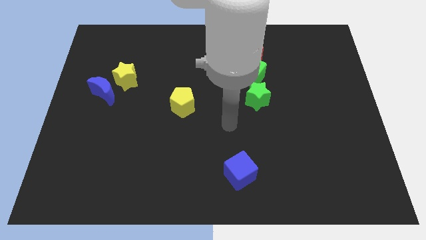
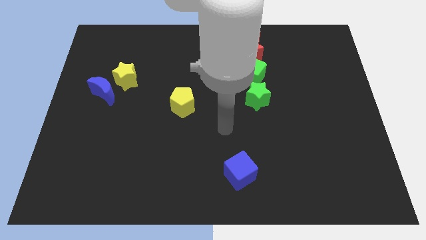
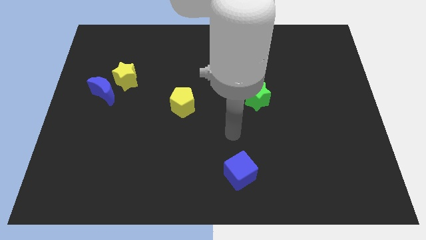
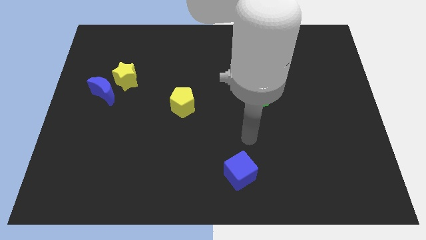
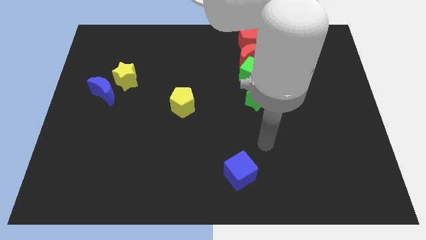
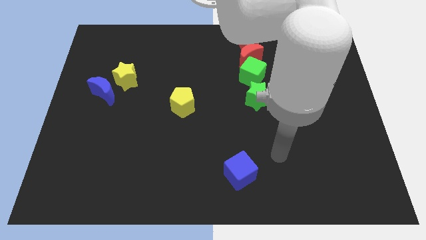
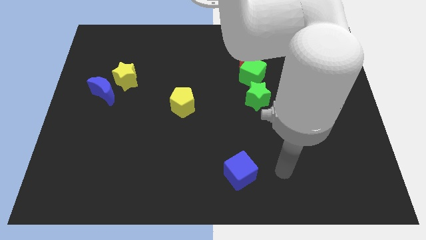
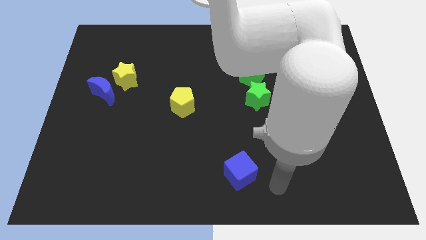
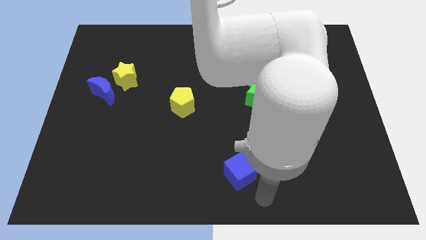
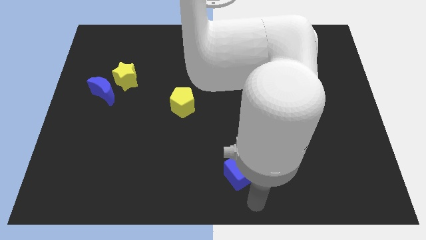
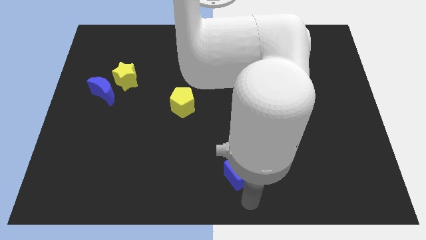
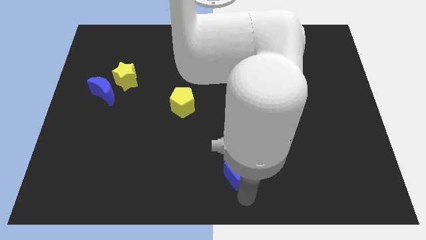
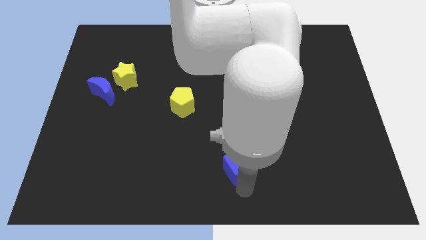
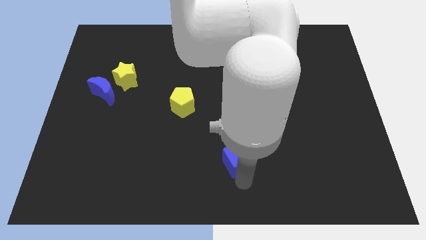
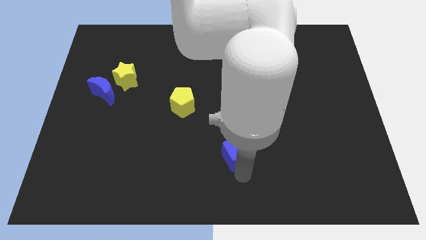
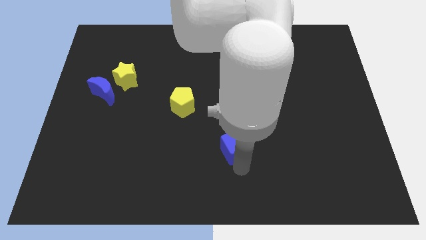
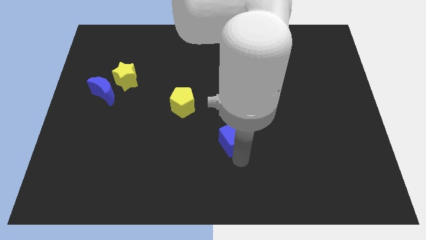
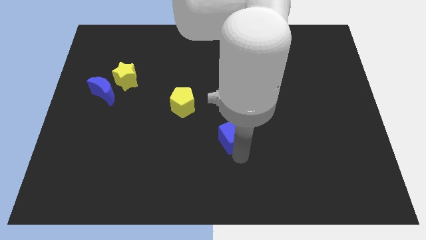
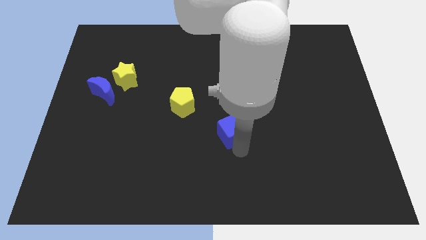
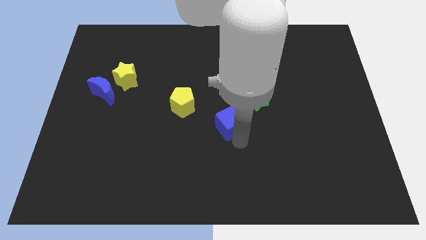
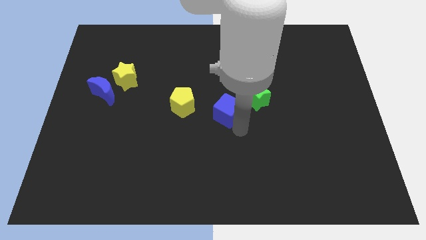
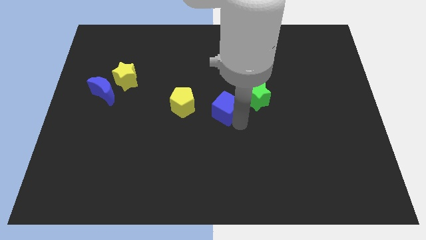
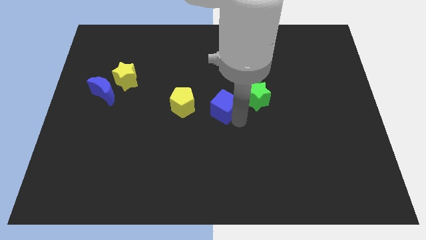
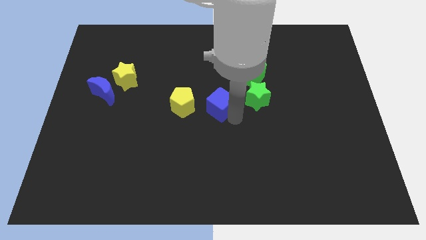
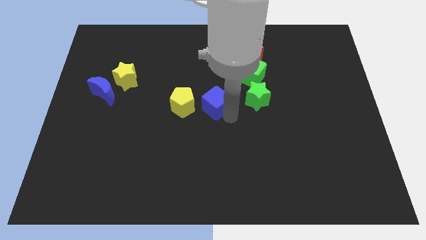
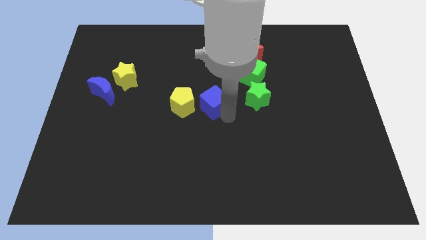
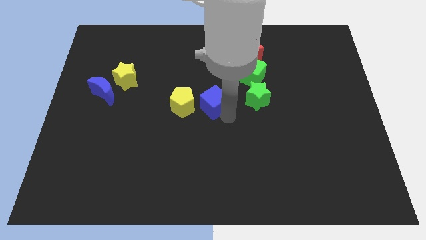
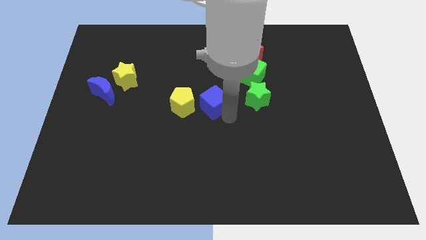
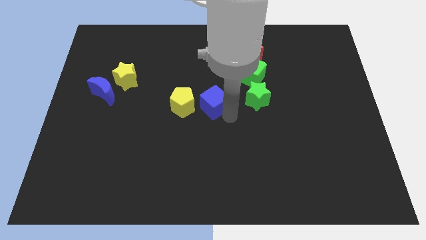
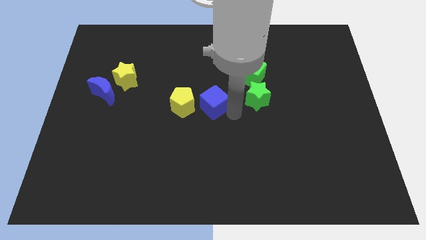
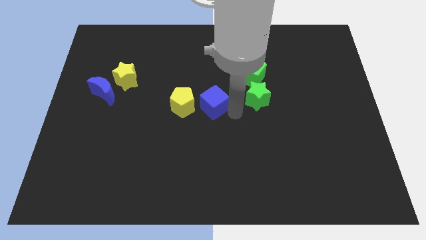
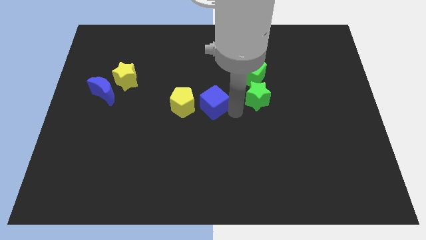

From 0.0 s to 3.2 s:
slide the blue cube parallel right to the yellow pentagon

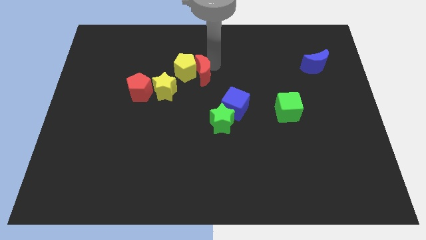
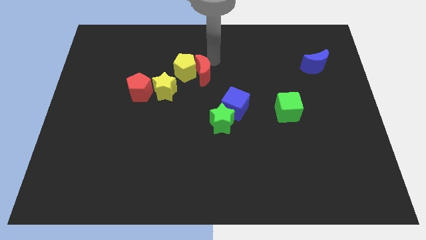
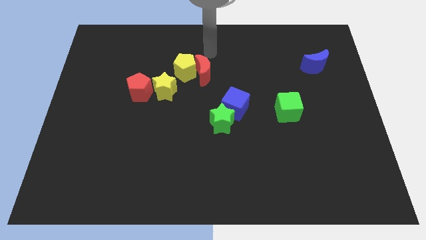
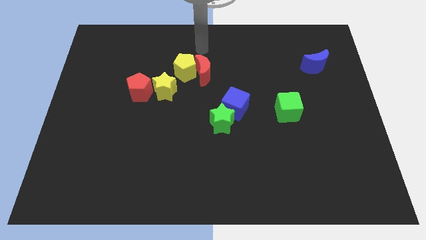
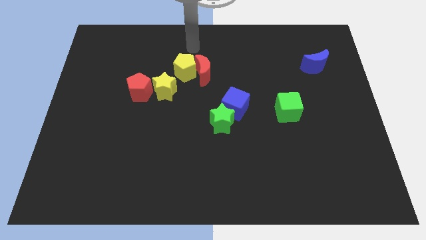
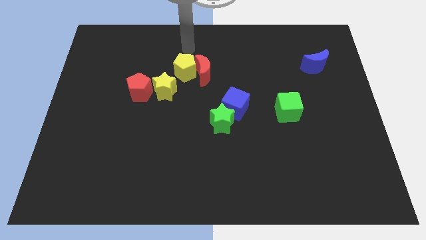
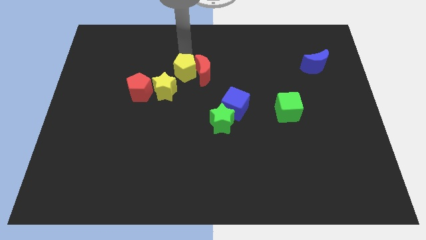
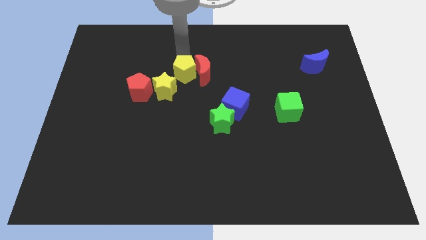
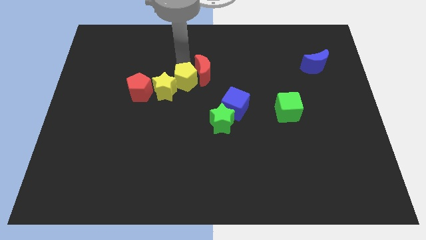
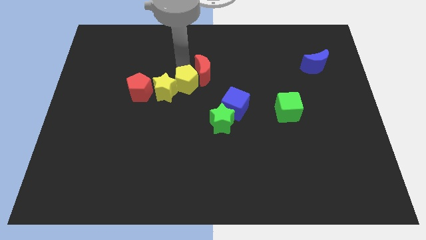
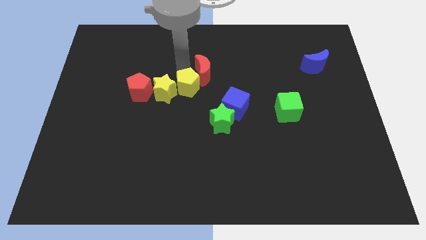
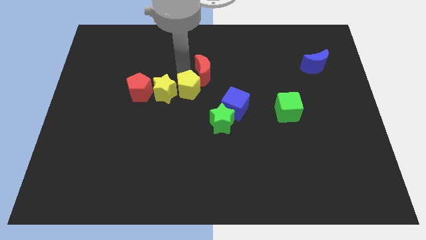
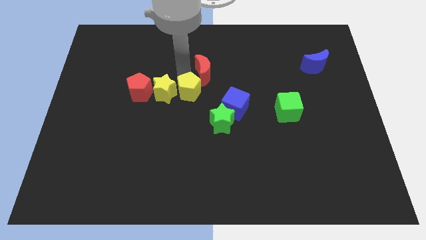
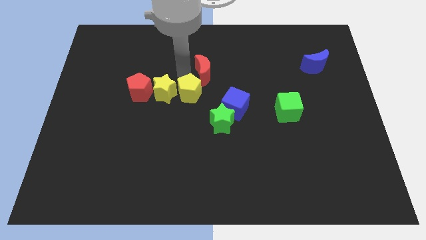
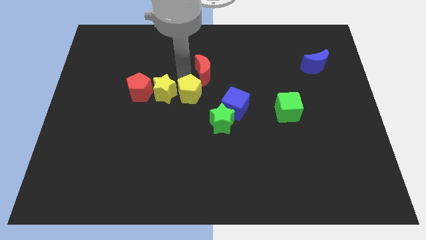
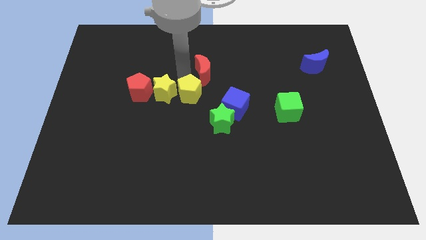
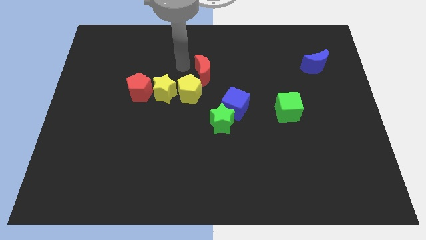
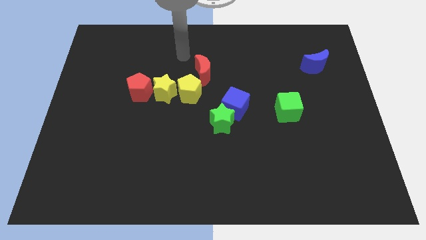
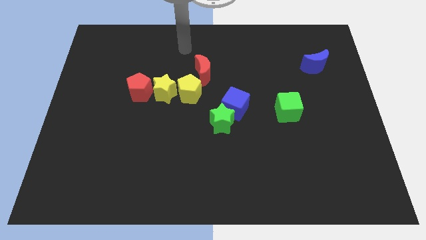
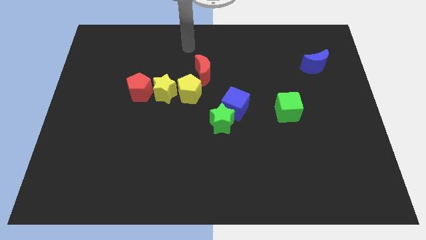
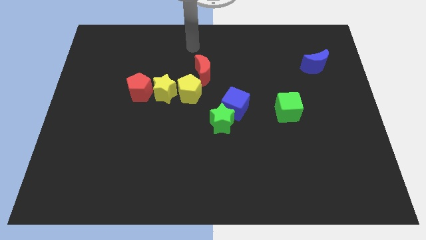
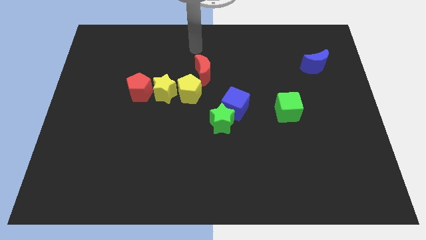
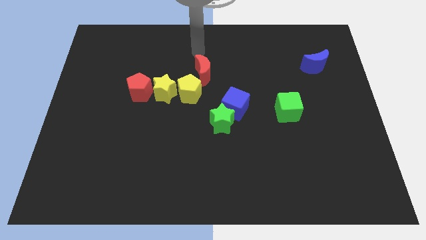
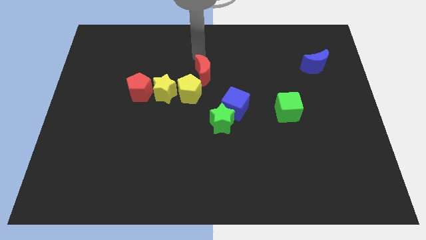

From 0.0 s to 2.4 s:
move yellow pentagon right to yellow star

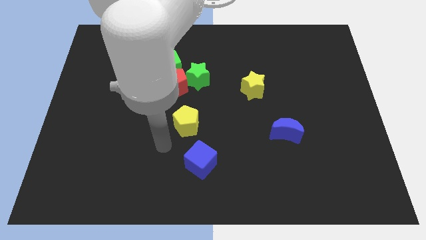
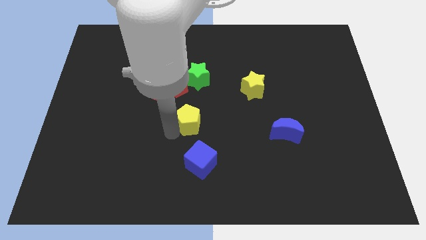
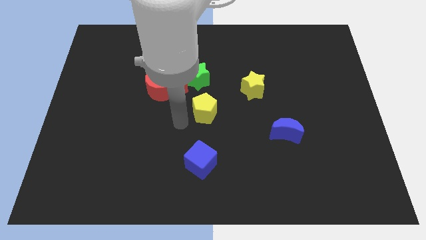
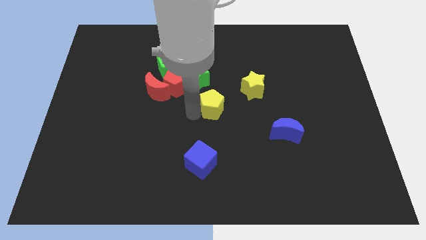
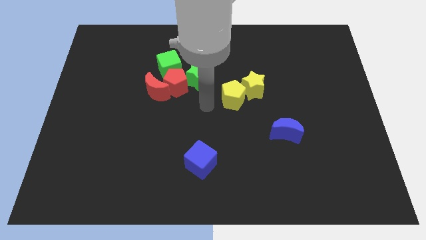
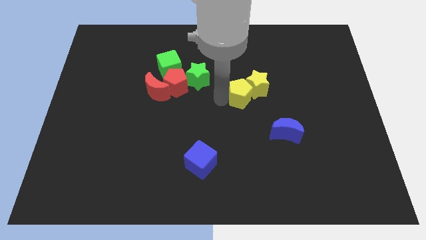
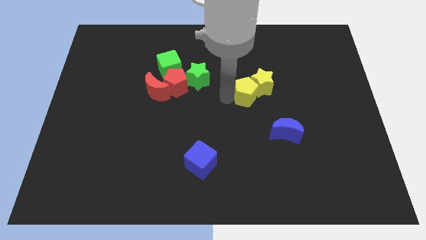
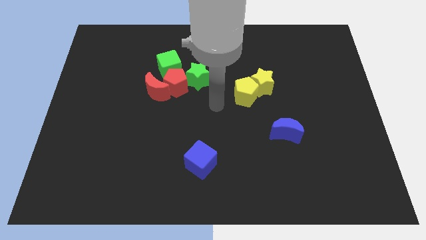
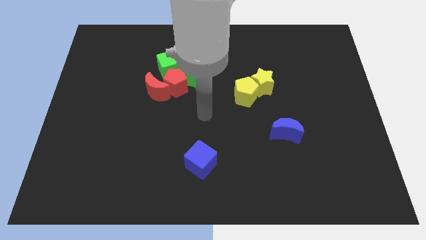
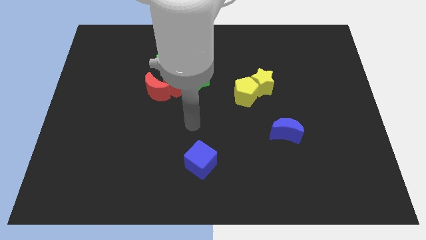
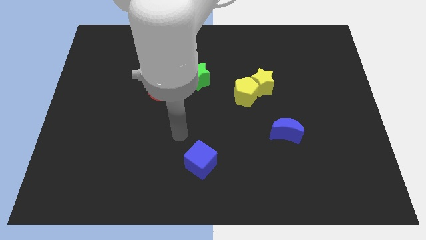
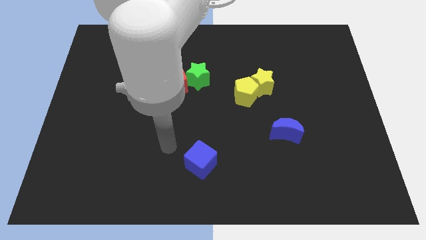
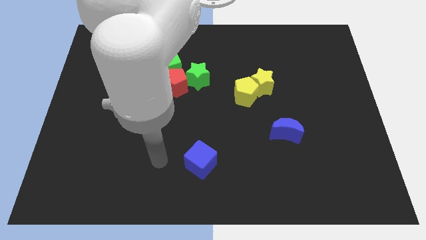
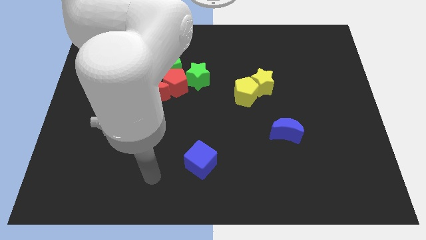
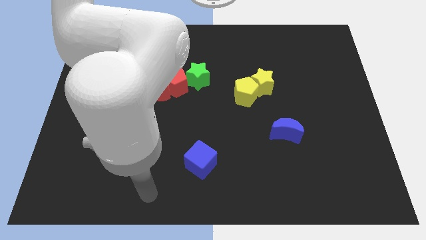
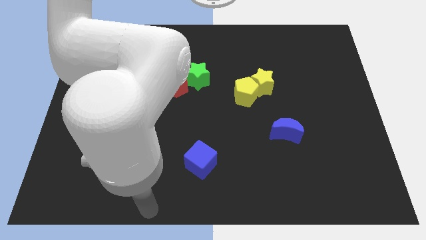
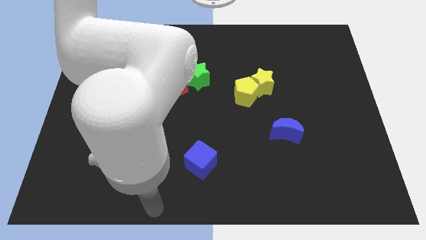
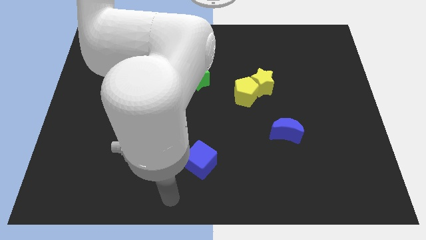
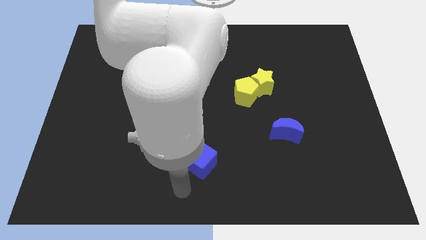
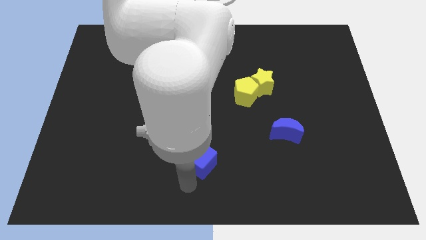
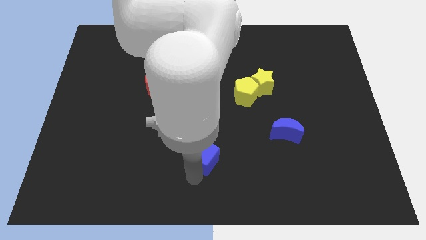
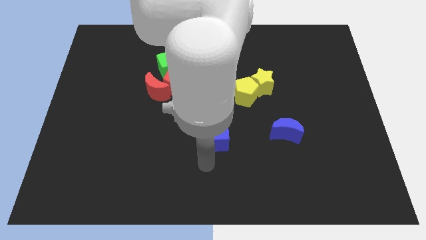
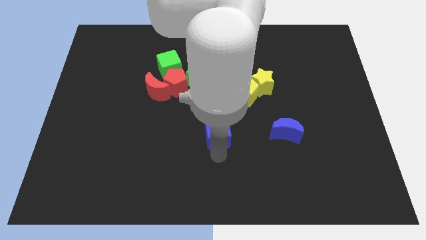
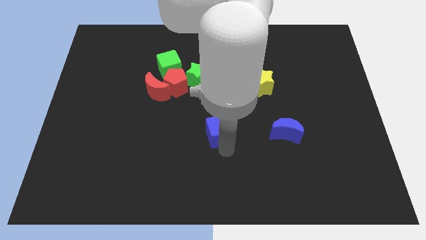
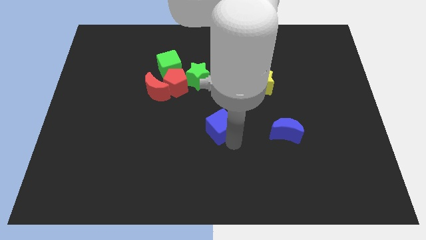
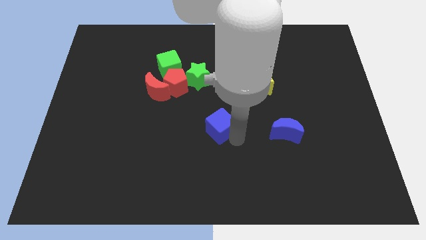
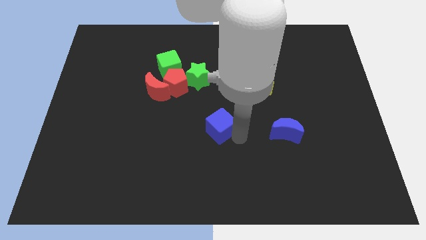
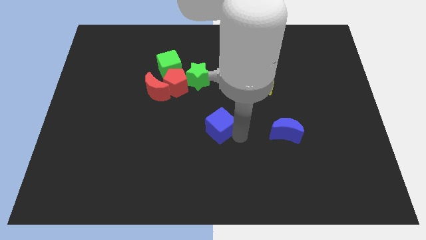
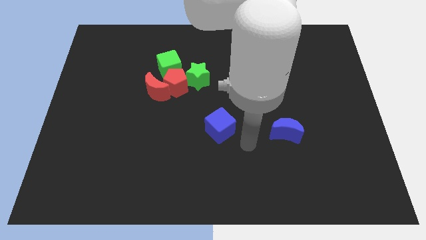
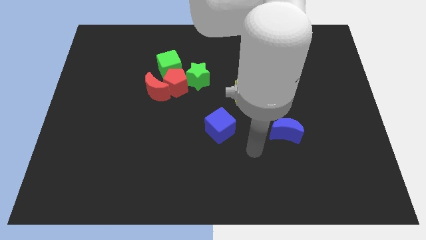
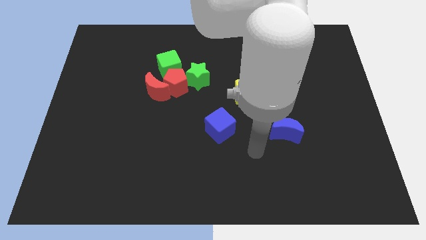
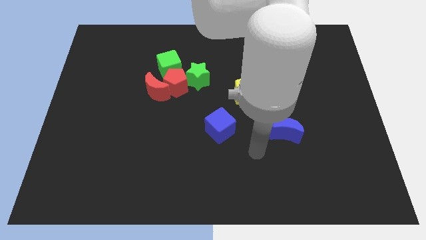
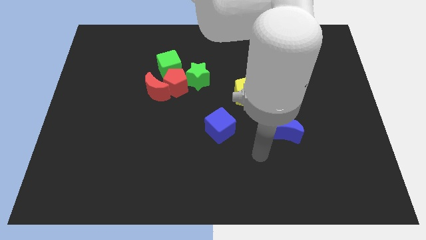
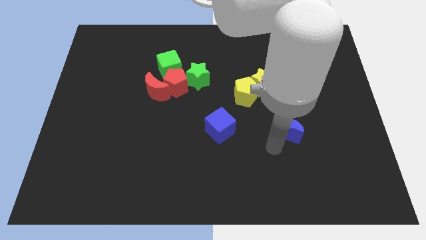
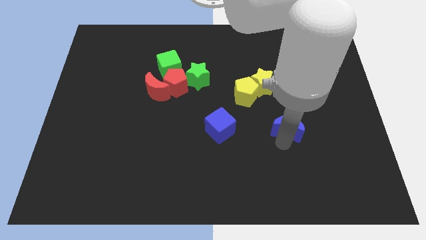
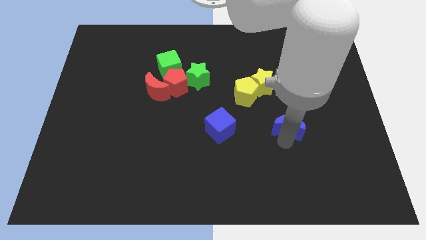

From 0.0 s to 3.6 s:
push the blue cube towards the center of the board
